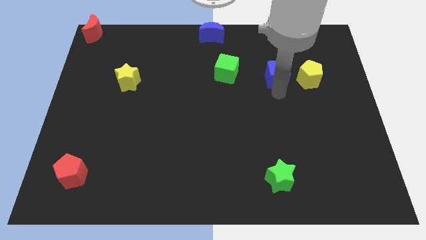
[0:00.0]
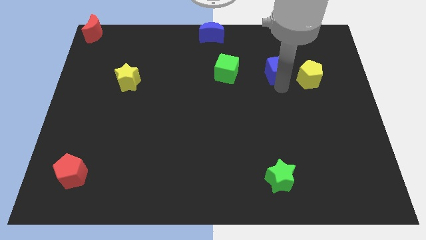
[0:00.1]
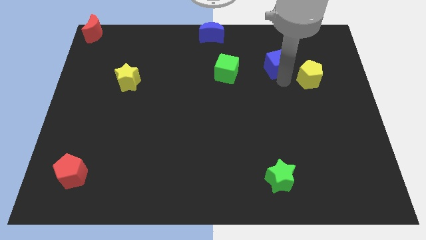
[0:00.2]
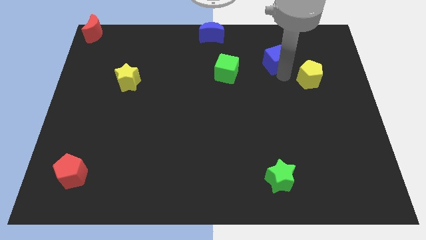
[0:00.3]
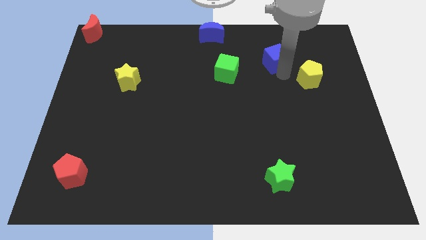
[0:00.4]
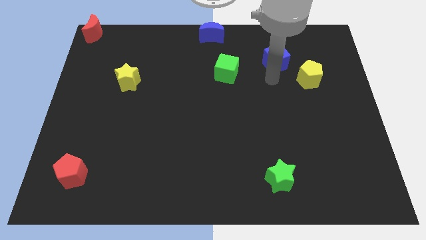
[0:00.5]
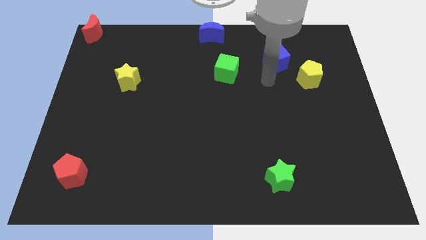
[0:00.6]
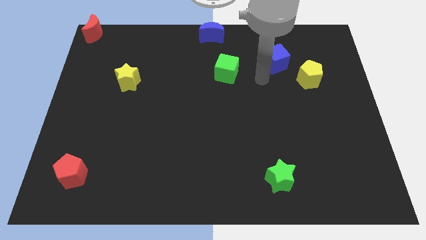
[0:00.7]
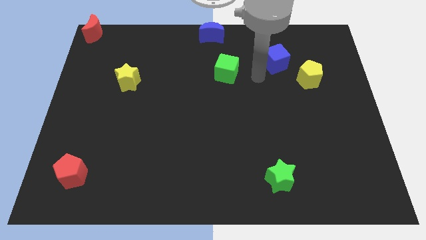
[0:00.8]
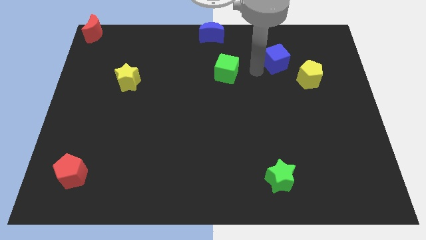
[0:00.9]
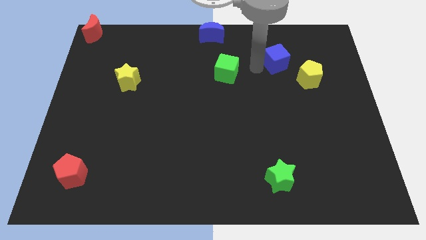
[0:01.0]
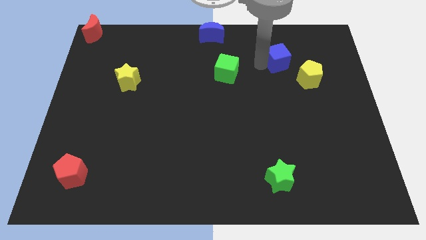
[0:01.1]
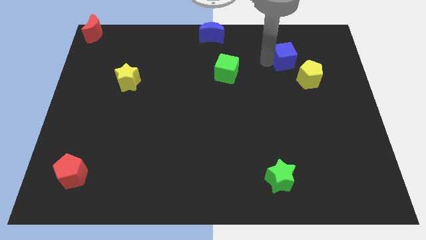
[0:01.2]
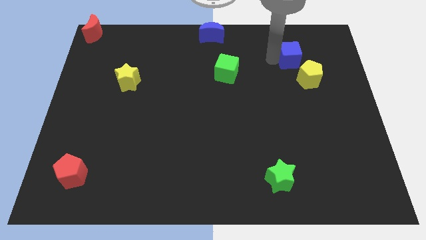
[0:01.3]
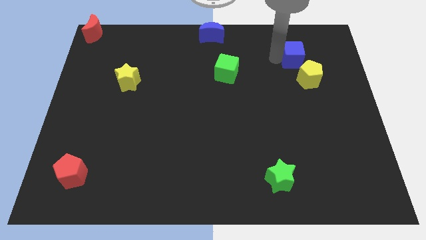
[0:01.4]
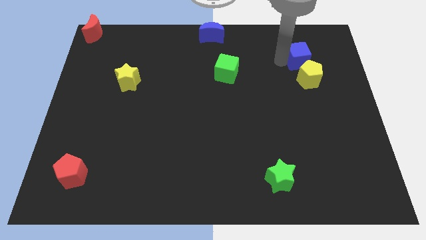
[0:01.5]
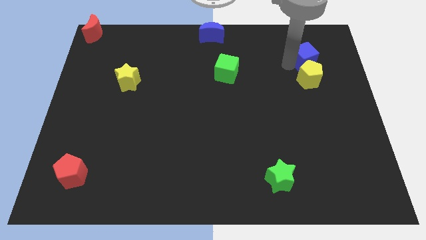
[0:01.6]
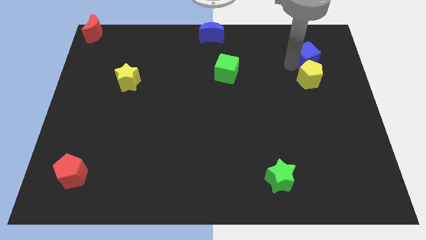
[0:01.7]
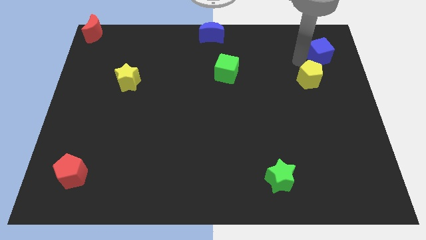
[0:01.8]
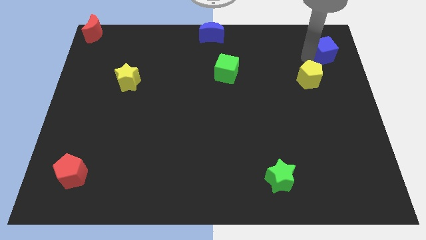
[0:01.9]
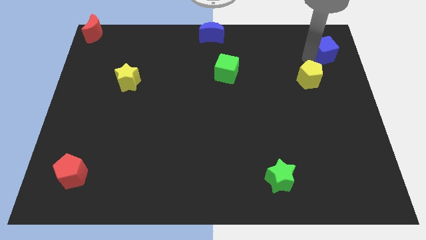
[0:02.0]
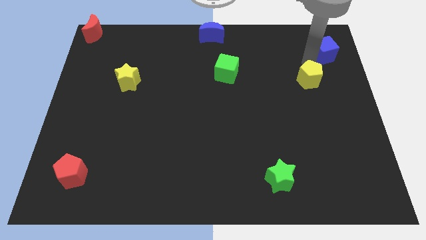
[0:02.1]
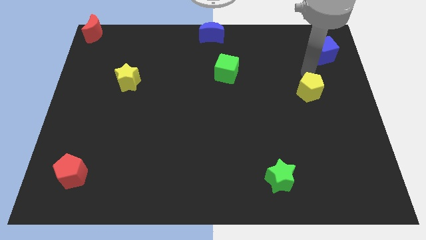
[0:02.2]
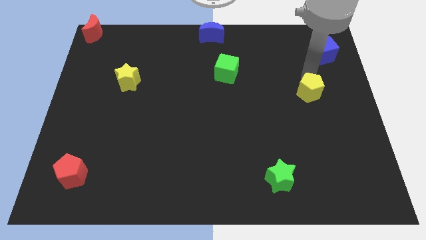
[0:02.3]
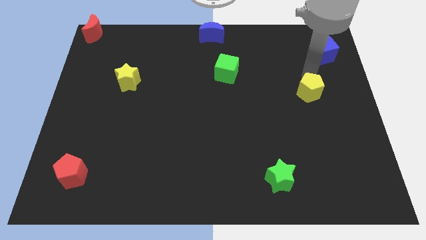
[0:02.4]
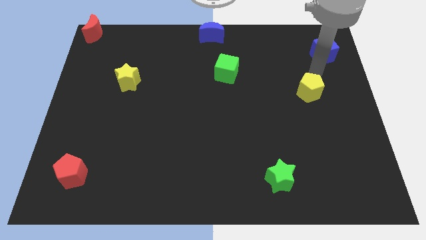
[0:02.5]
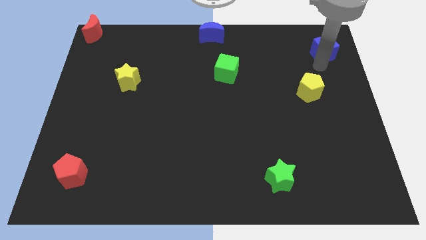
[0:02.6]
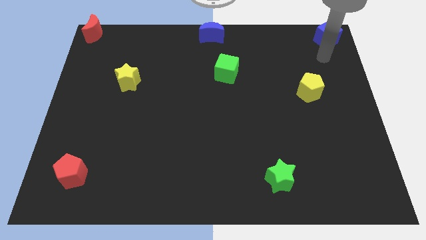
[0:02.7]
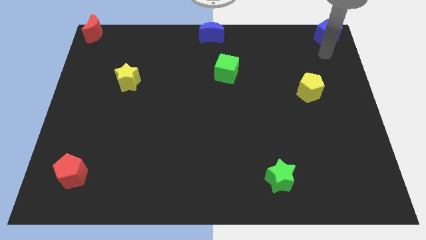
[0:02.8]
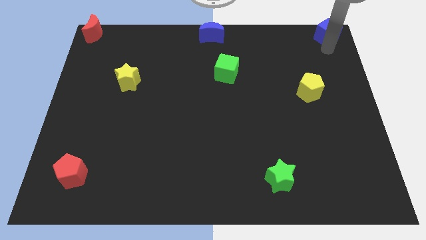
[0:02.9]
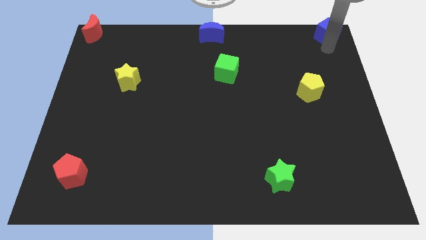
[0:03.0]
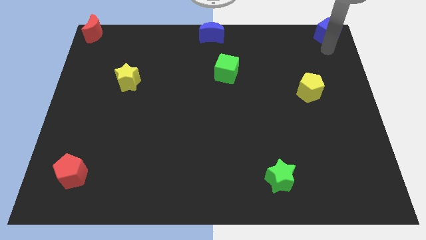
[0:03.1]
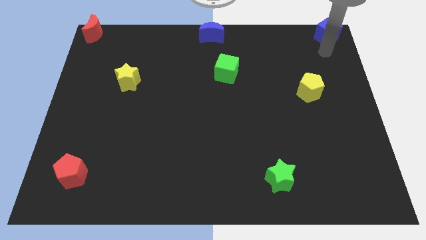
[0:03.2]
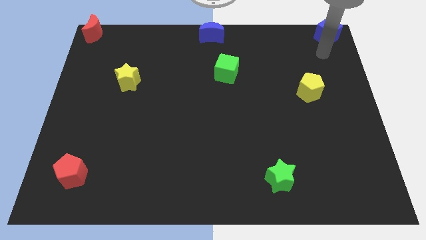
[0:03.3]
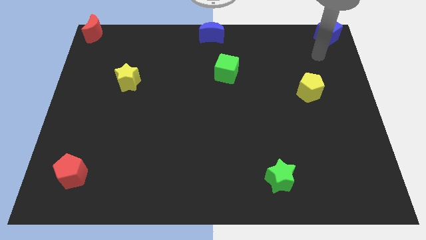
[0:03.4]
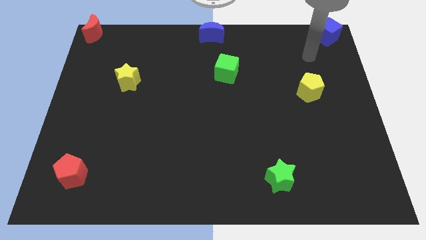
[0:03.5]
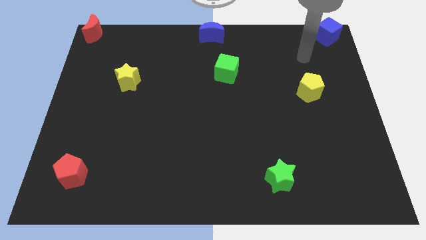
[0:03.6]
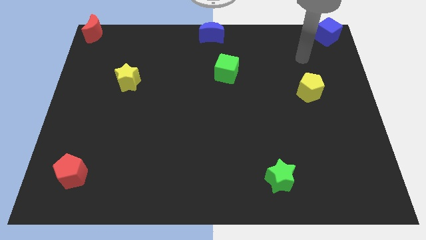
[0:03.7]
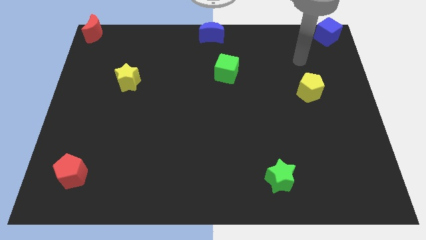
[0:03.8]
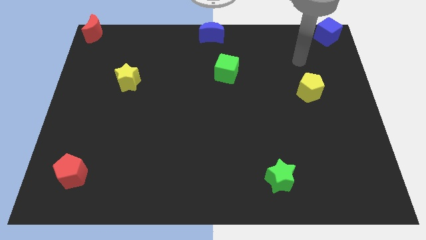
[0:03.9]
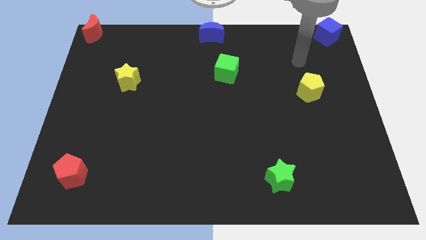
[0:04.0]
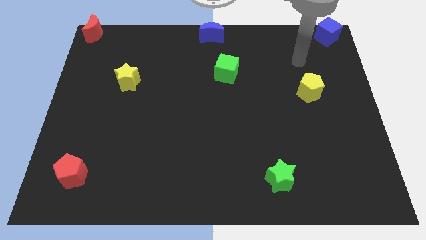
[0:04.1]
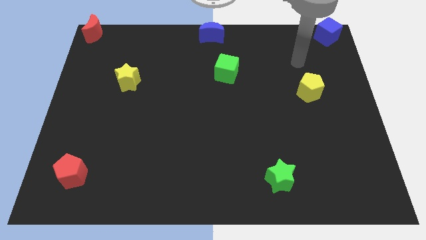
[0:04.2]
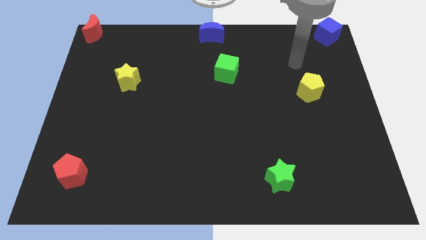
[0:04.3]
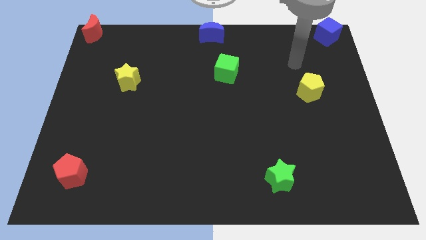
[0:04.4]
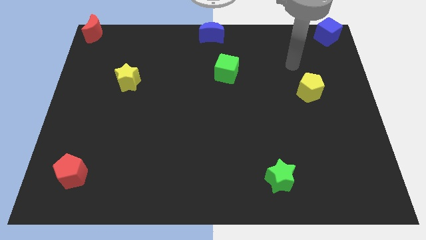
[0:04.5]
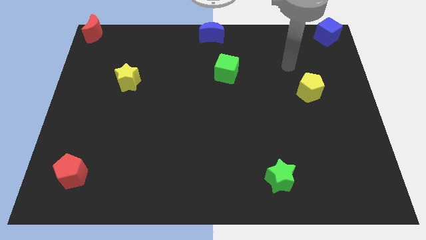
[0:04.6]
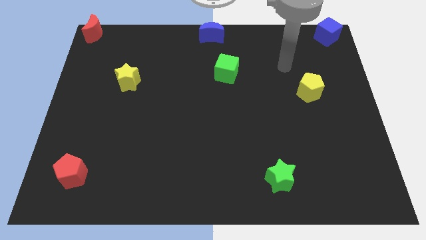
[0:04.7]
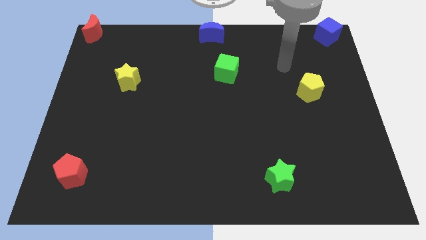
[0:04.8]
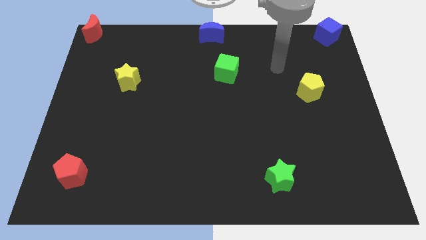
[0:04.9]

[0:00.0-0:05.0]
slide the blue cube to the top right corner of the board

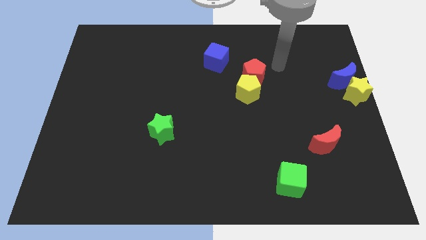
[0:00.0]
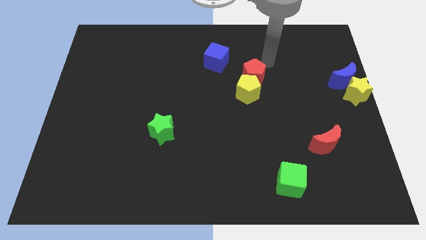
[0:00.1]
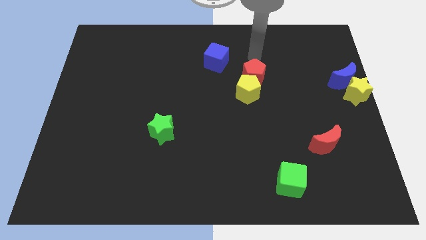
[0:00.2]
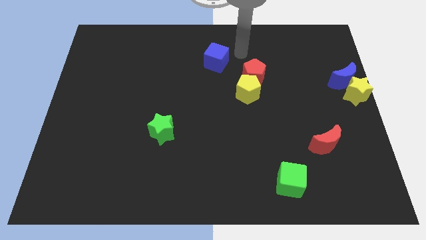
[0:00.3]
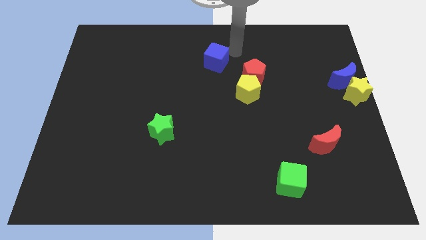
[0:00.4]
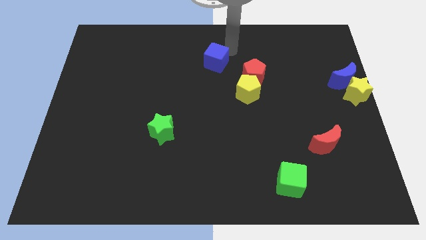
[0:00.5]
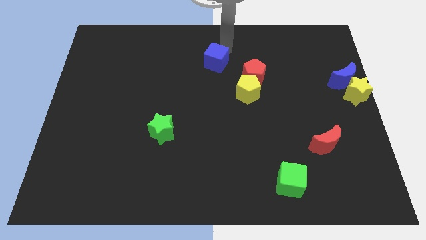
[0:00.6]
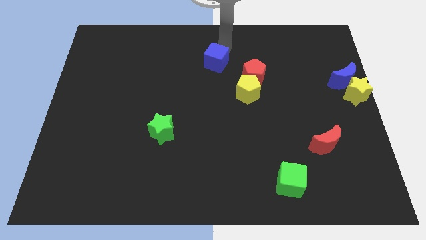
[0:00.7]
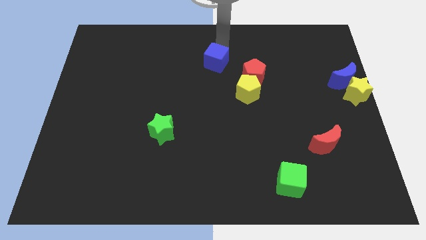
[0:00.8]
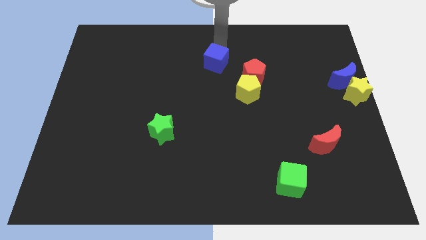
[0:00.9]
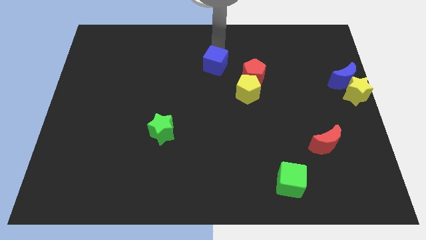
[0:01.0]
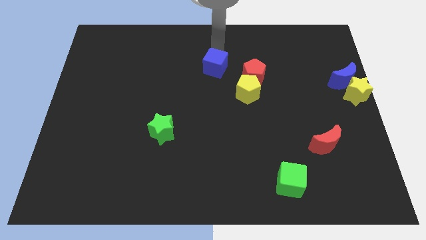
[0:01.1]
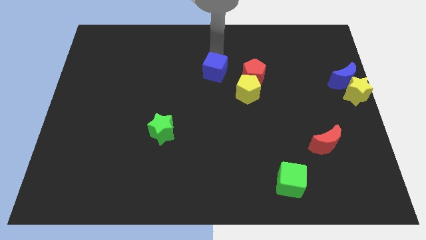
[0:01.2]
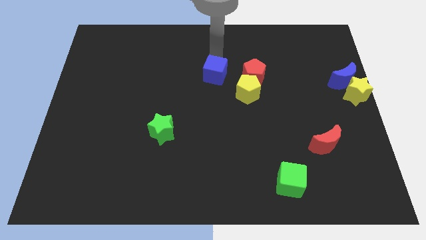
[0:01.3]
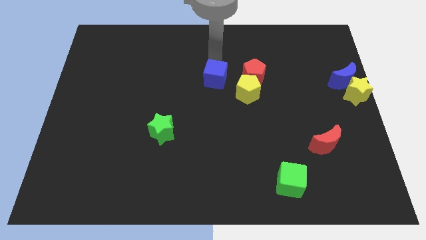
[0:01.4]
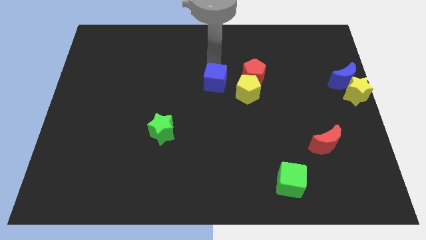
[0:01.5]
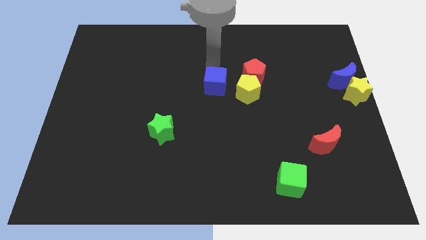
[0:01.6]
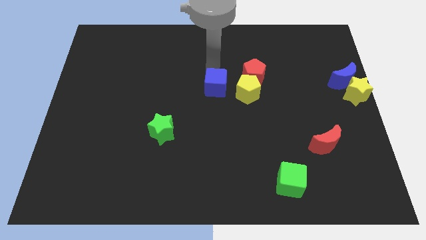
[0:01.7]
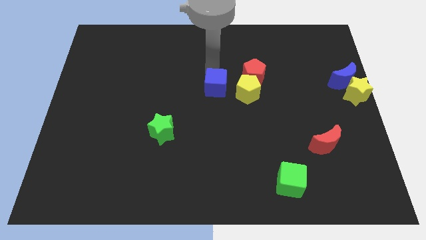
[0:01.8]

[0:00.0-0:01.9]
place the blue cube to the left side of the yellow pentagon

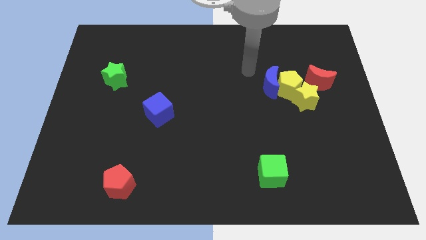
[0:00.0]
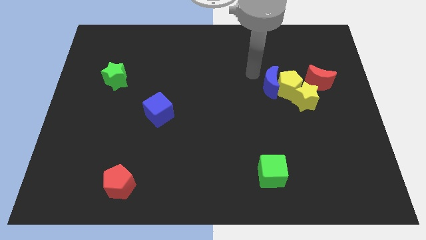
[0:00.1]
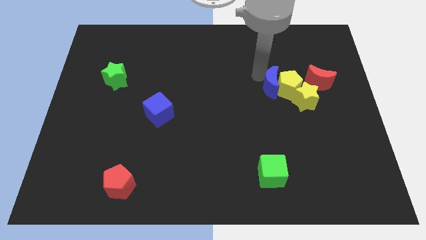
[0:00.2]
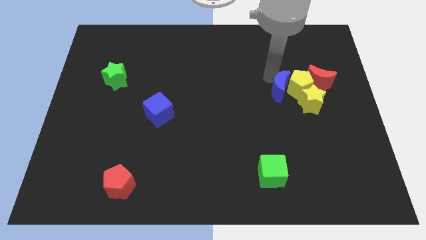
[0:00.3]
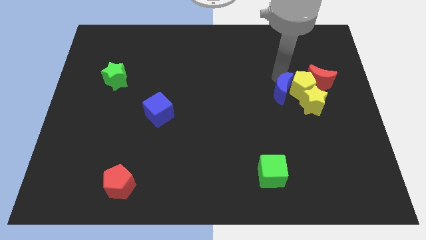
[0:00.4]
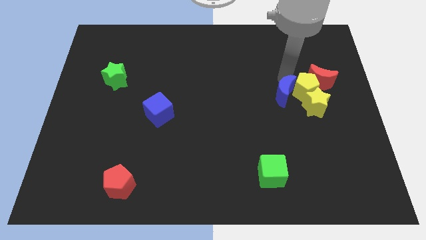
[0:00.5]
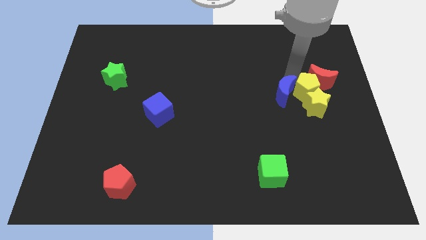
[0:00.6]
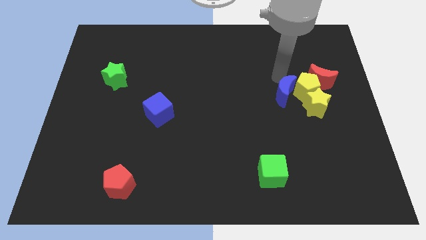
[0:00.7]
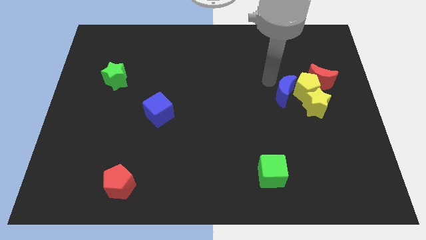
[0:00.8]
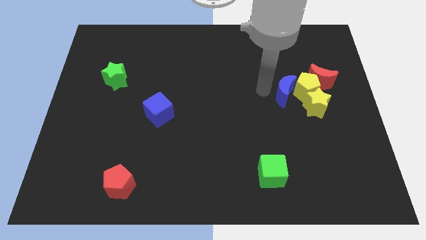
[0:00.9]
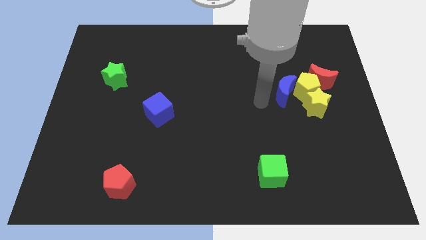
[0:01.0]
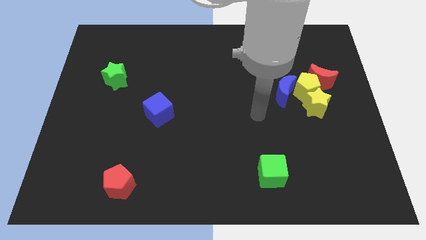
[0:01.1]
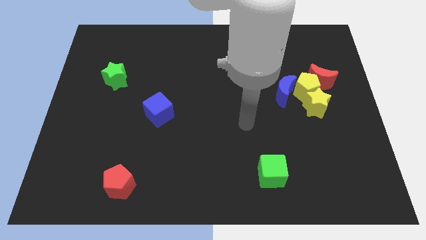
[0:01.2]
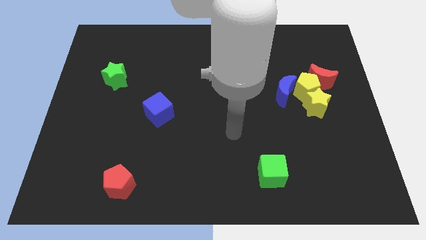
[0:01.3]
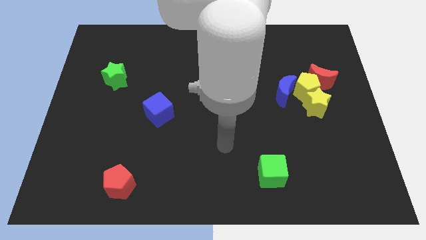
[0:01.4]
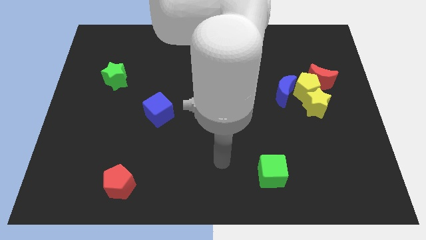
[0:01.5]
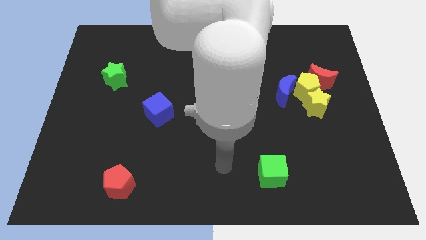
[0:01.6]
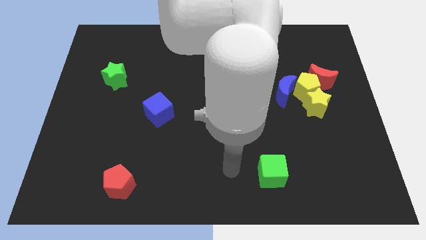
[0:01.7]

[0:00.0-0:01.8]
push the blue crescent into the yellow pentagon

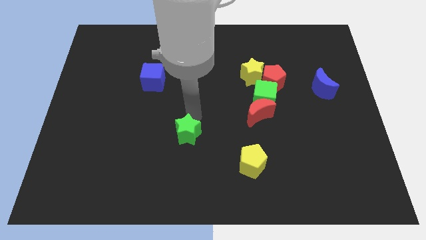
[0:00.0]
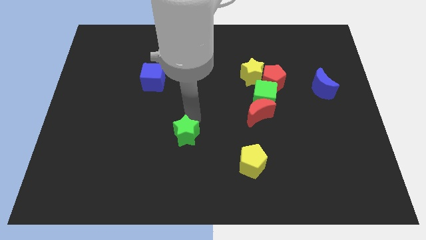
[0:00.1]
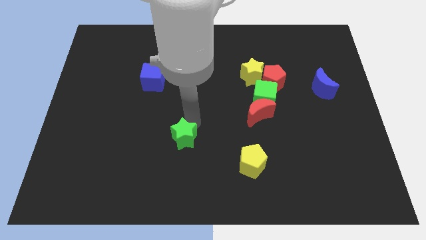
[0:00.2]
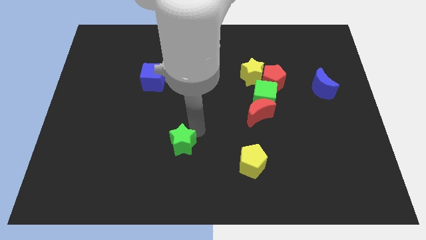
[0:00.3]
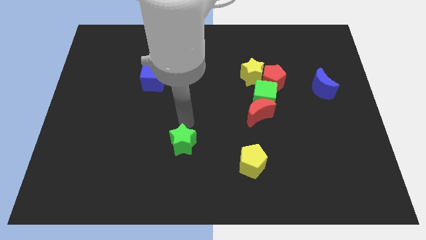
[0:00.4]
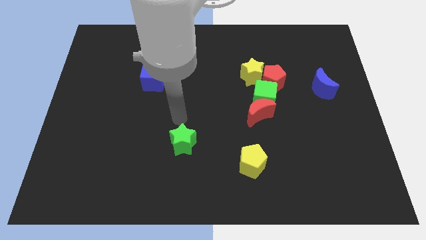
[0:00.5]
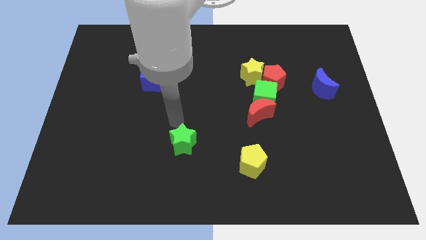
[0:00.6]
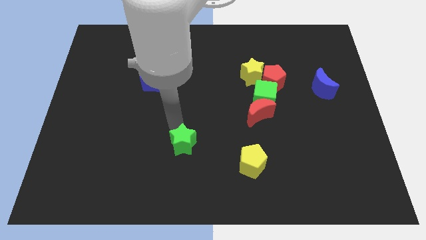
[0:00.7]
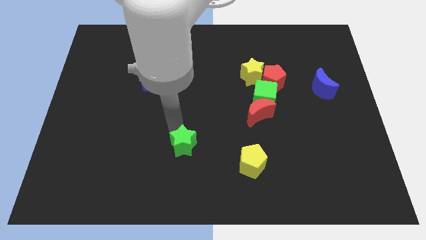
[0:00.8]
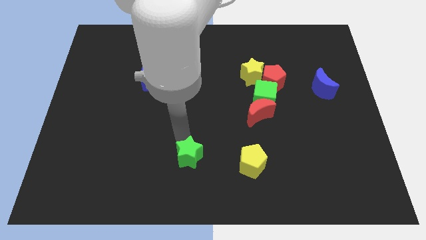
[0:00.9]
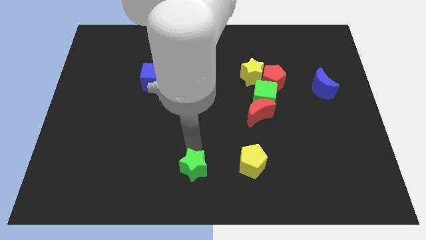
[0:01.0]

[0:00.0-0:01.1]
place the green star left to the yellow pentagon
